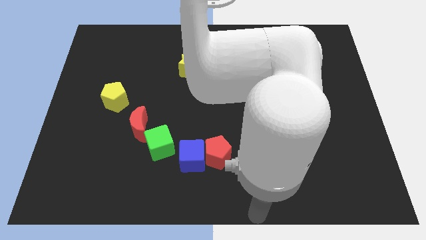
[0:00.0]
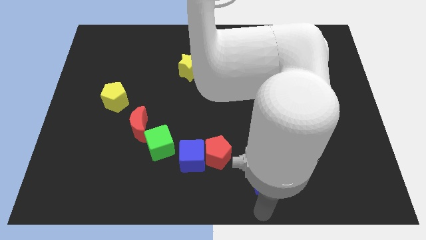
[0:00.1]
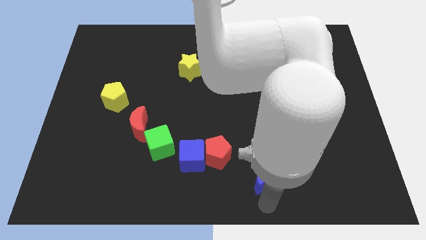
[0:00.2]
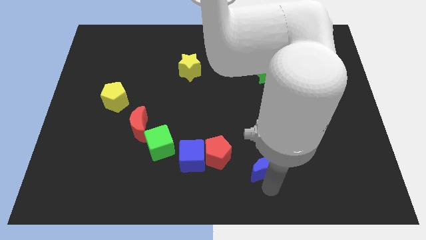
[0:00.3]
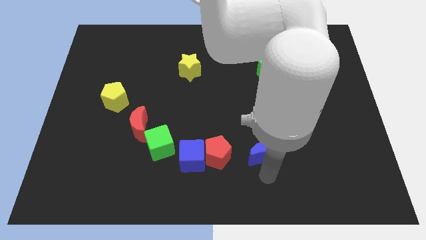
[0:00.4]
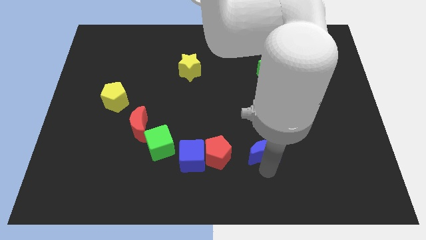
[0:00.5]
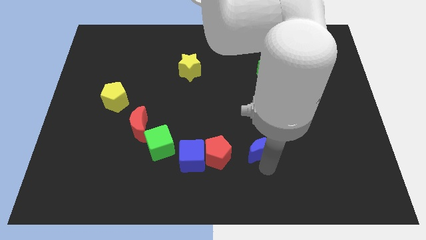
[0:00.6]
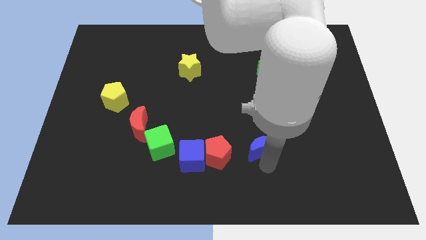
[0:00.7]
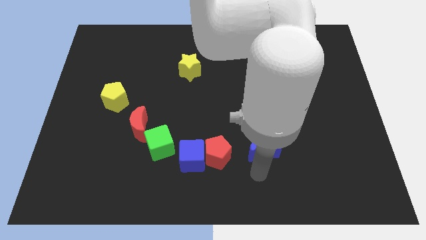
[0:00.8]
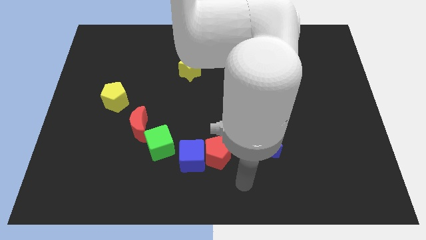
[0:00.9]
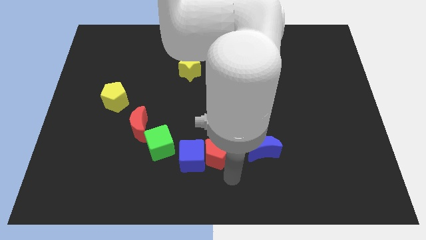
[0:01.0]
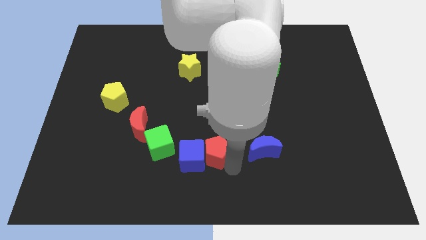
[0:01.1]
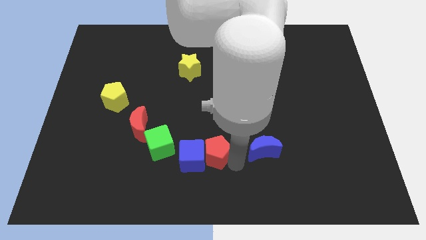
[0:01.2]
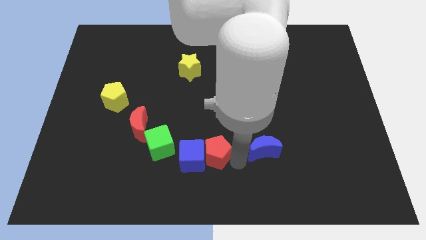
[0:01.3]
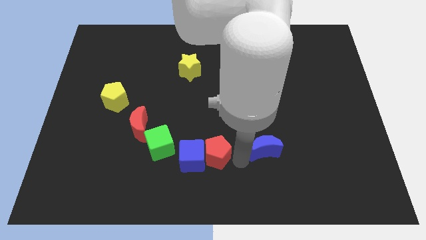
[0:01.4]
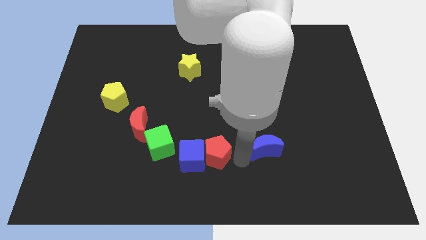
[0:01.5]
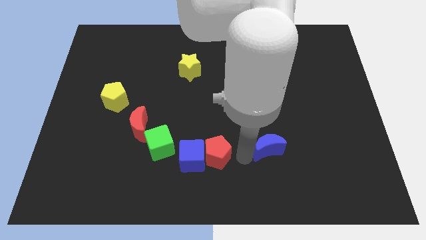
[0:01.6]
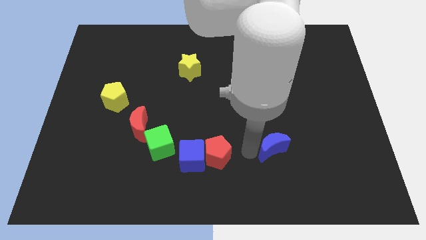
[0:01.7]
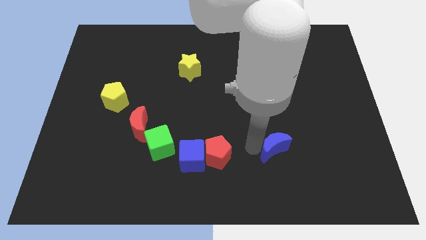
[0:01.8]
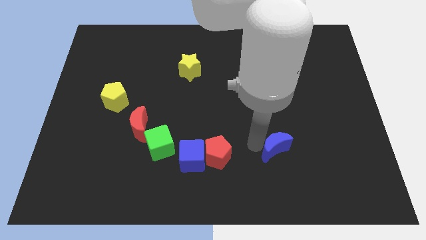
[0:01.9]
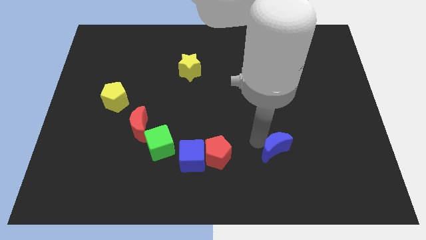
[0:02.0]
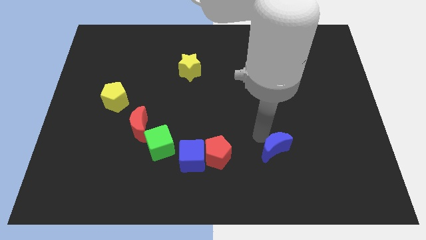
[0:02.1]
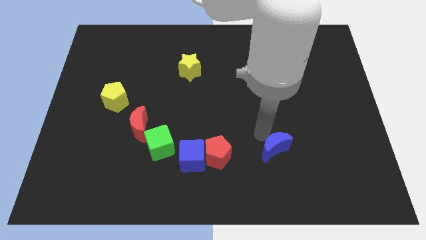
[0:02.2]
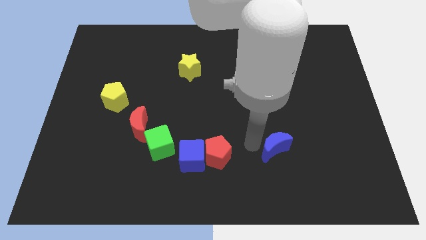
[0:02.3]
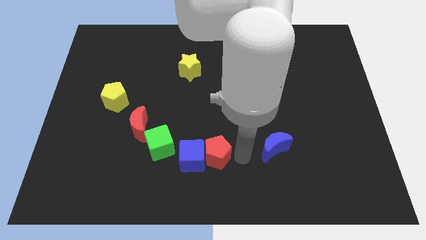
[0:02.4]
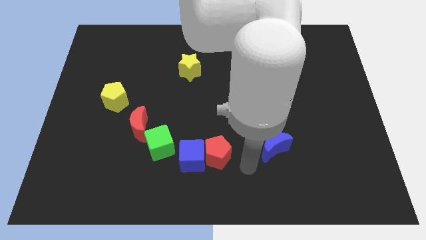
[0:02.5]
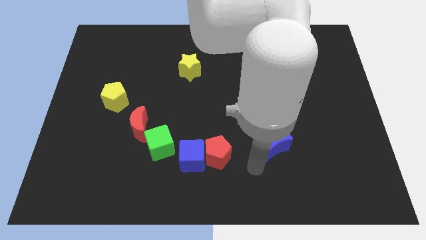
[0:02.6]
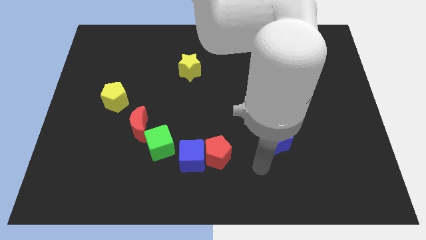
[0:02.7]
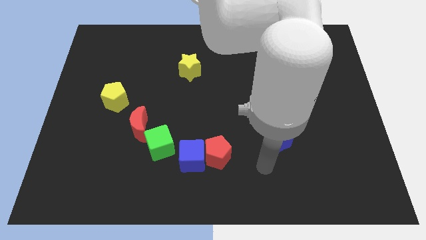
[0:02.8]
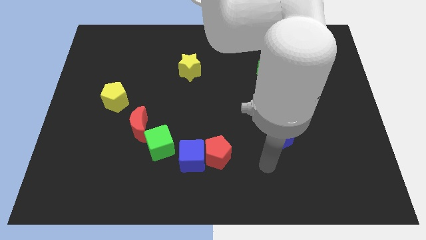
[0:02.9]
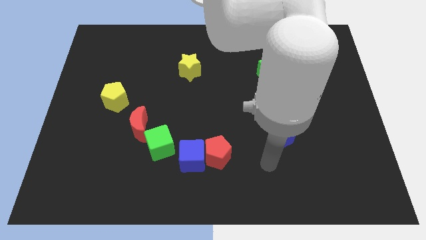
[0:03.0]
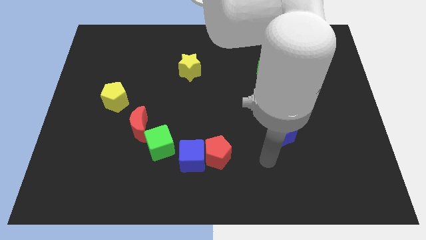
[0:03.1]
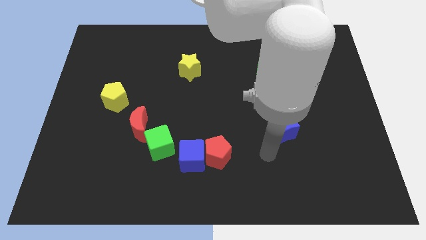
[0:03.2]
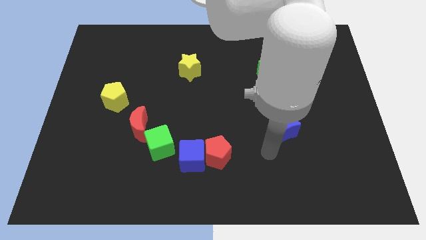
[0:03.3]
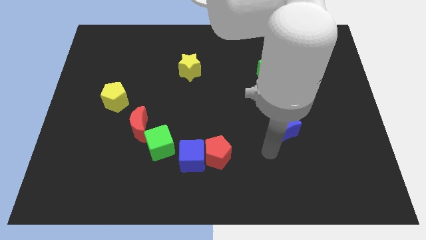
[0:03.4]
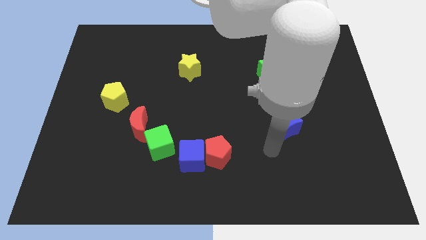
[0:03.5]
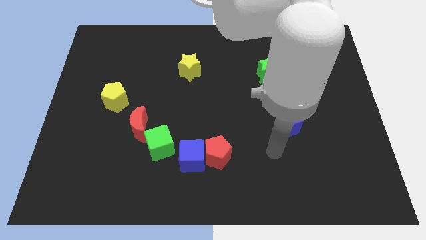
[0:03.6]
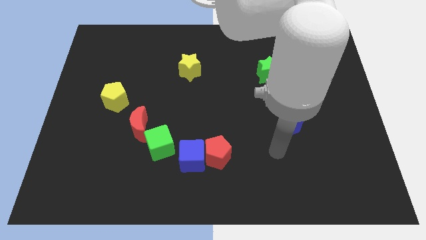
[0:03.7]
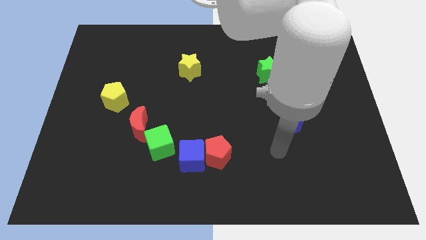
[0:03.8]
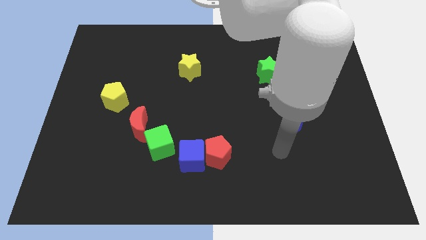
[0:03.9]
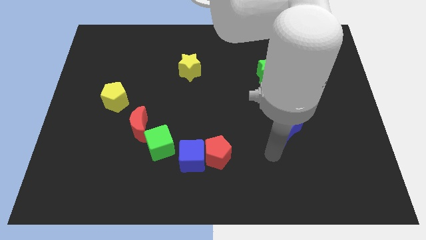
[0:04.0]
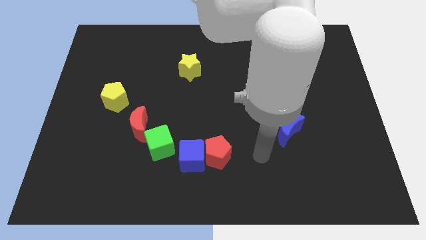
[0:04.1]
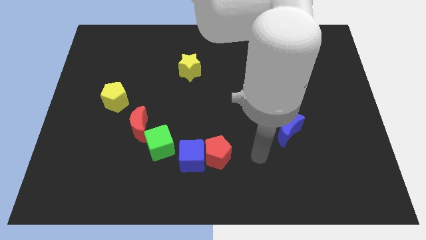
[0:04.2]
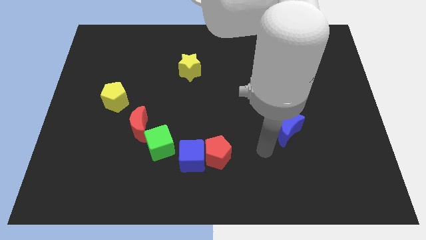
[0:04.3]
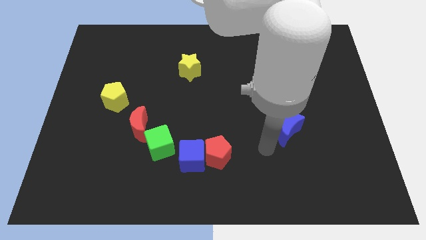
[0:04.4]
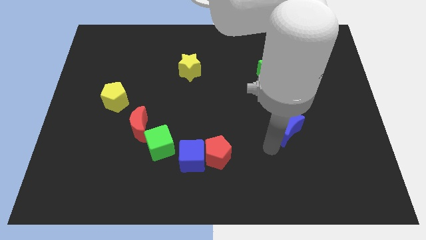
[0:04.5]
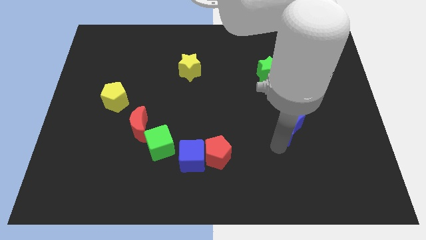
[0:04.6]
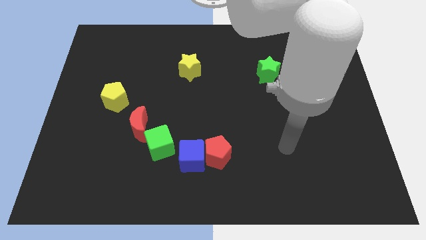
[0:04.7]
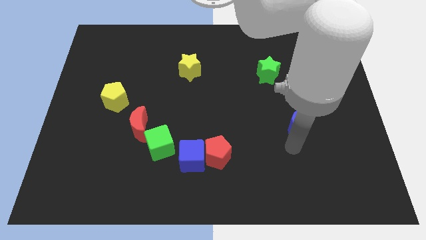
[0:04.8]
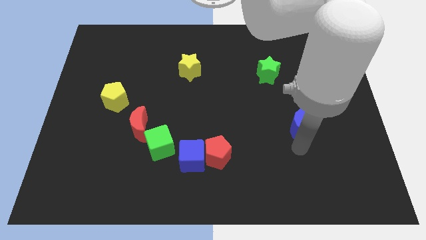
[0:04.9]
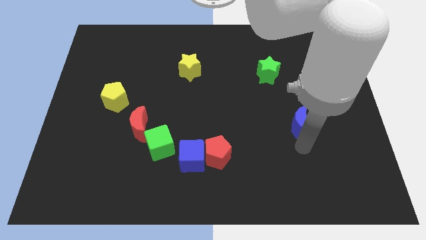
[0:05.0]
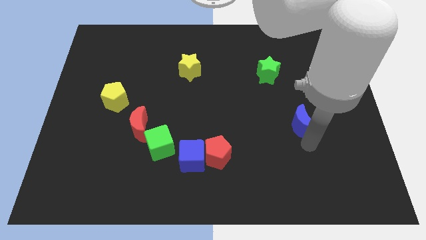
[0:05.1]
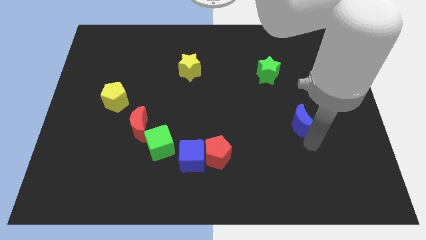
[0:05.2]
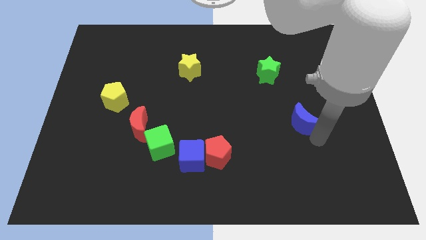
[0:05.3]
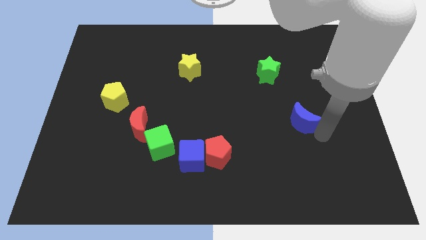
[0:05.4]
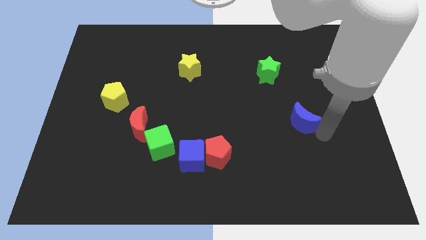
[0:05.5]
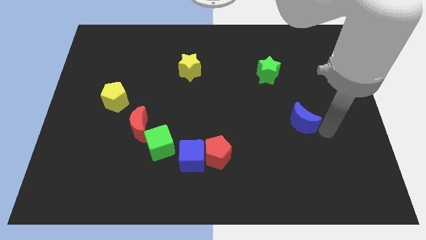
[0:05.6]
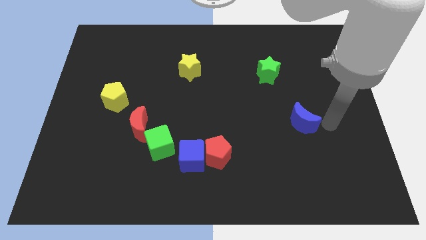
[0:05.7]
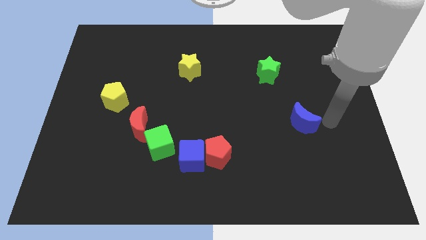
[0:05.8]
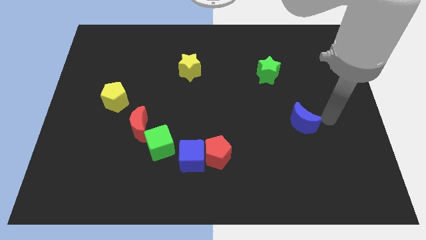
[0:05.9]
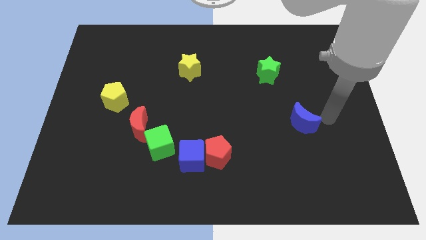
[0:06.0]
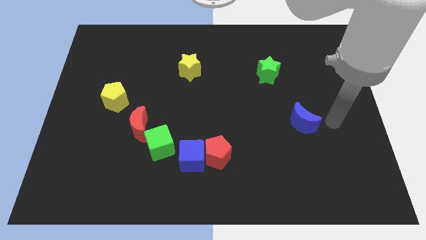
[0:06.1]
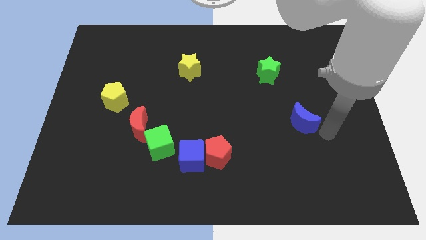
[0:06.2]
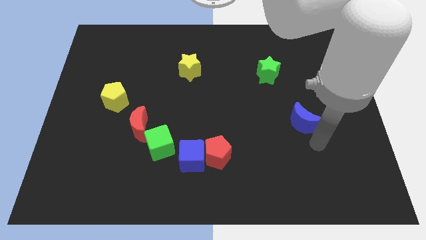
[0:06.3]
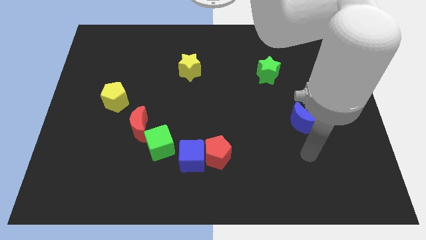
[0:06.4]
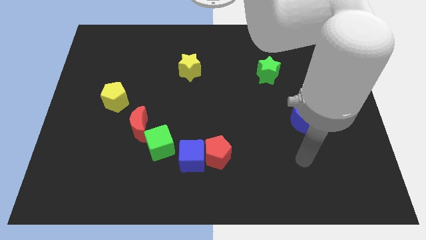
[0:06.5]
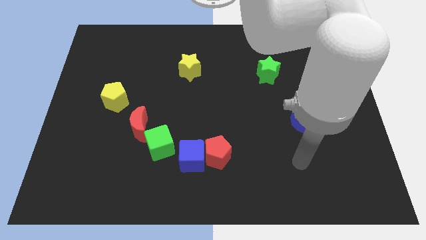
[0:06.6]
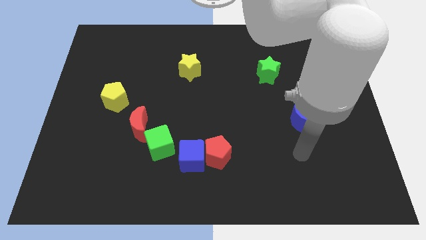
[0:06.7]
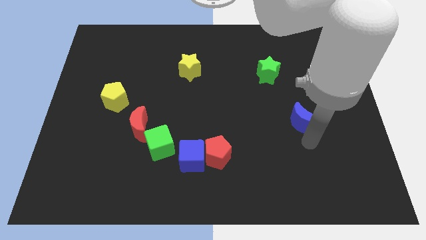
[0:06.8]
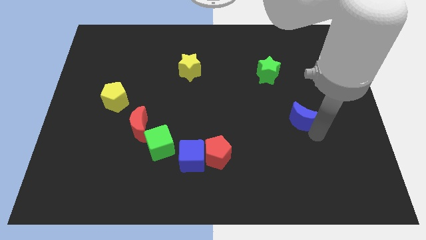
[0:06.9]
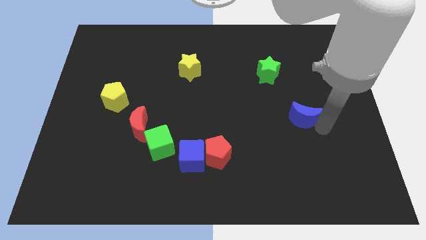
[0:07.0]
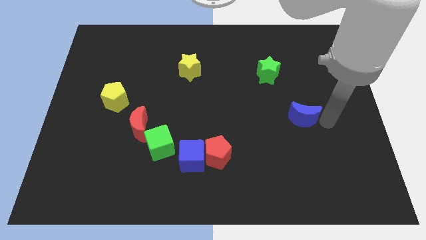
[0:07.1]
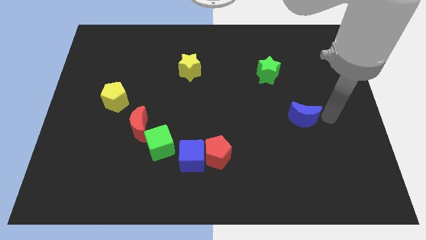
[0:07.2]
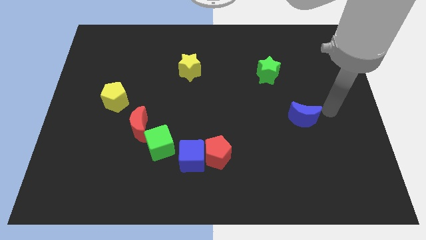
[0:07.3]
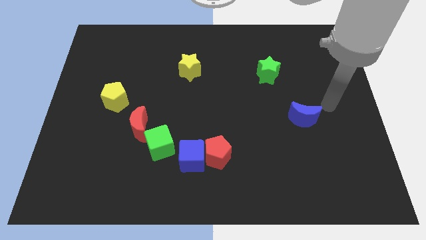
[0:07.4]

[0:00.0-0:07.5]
move the blue crescent to the top of the board

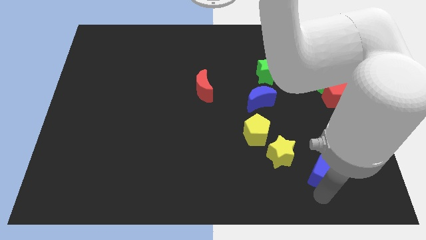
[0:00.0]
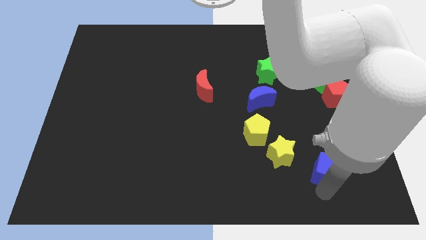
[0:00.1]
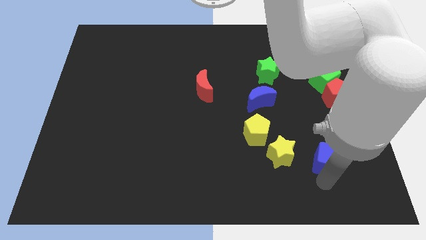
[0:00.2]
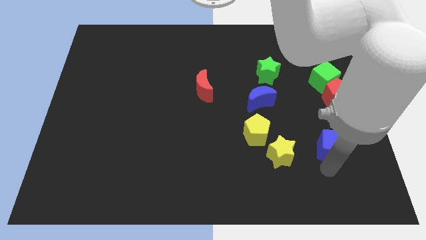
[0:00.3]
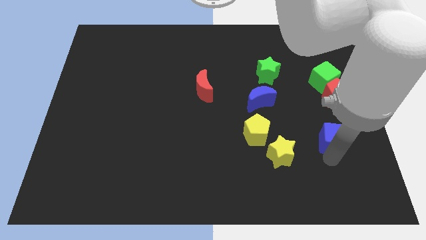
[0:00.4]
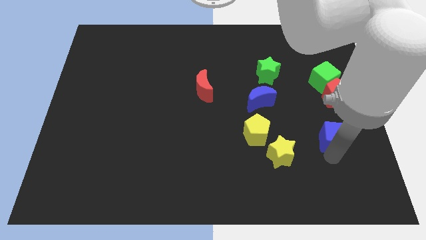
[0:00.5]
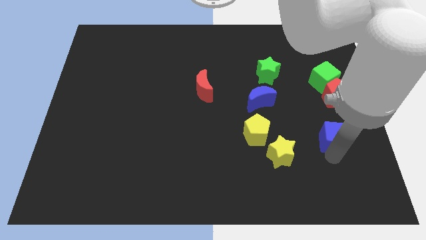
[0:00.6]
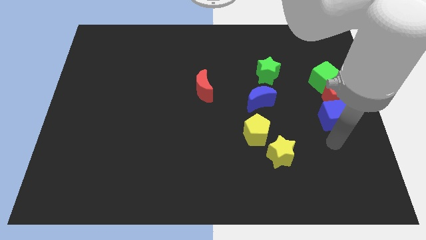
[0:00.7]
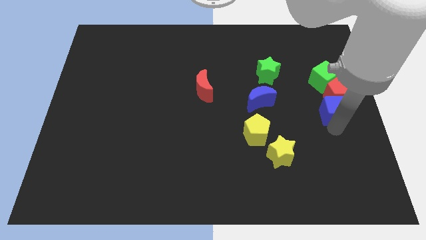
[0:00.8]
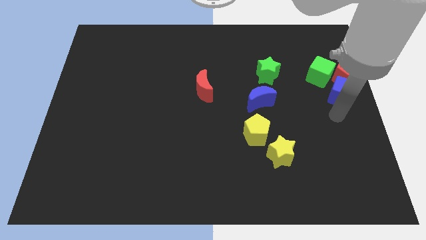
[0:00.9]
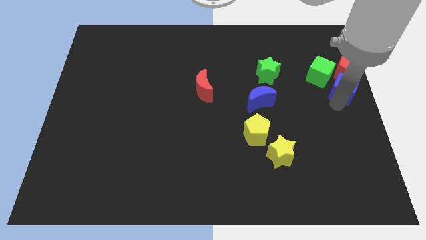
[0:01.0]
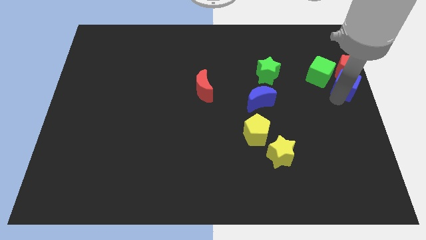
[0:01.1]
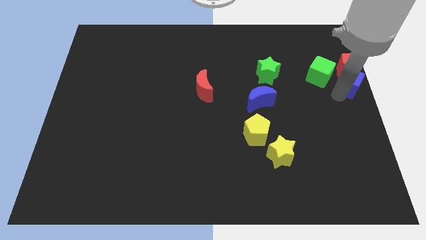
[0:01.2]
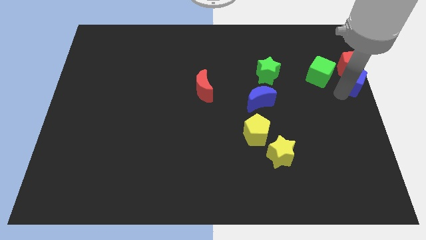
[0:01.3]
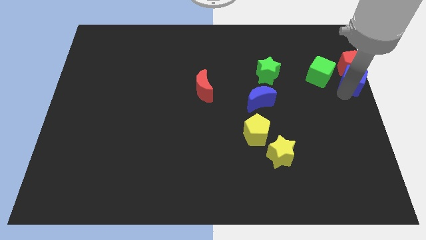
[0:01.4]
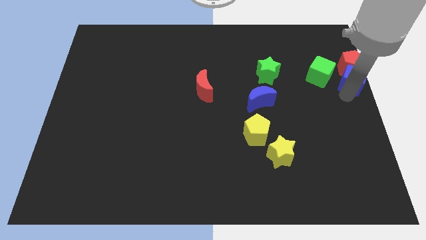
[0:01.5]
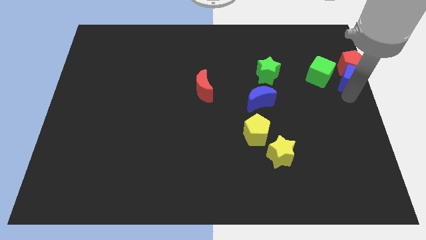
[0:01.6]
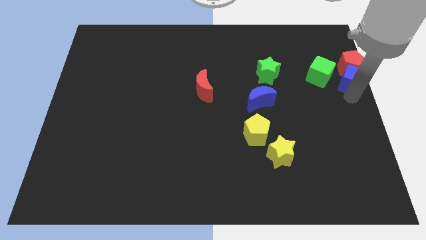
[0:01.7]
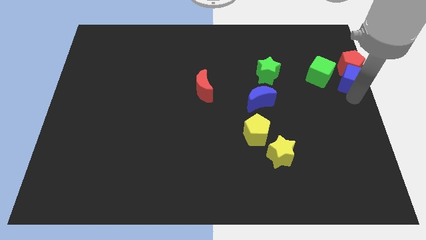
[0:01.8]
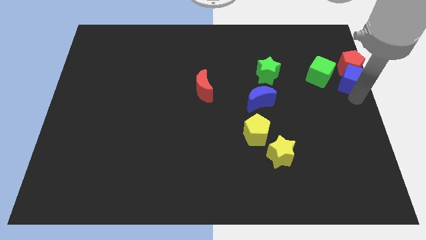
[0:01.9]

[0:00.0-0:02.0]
drag the blue cube slightly upwards
